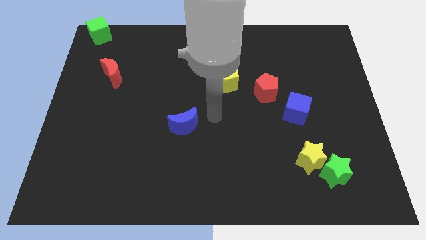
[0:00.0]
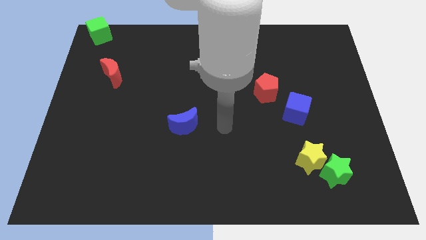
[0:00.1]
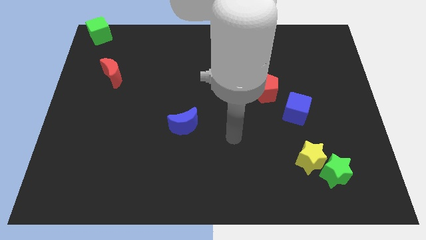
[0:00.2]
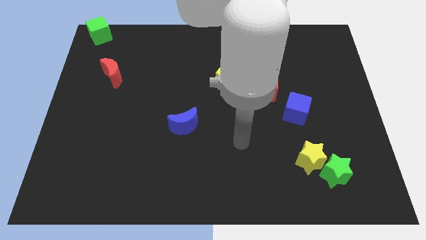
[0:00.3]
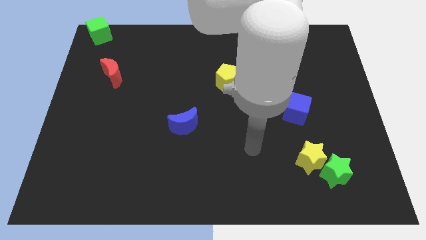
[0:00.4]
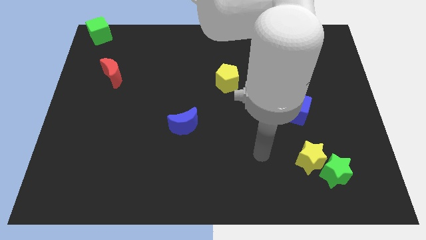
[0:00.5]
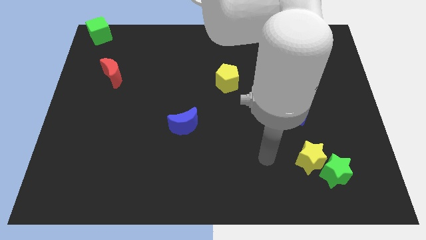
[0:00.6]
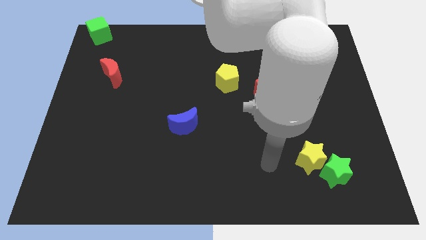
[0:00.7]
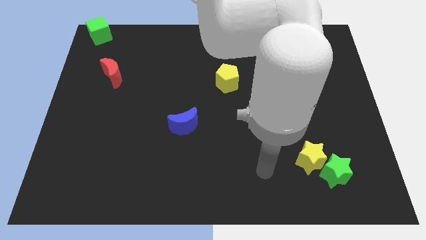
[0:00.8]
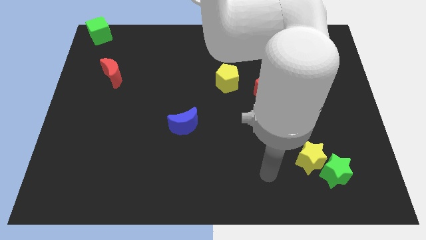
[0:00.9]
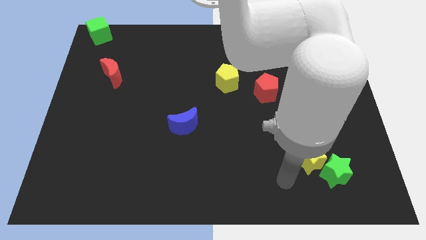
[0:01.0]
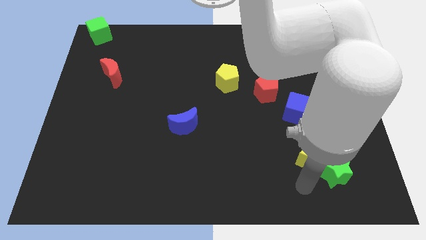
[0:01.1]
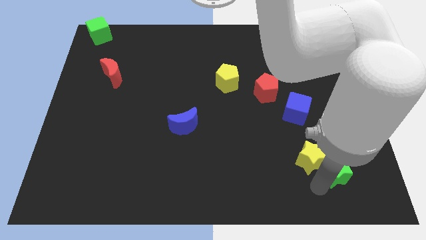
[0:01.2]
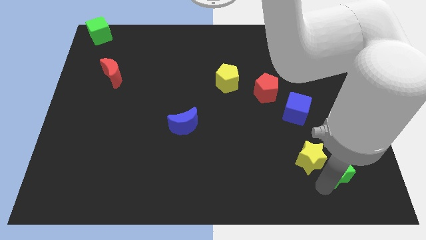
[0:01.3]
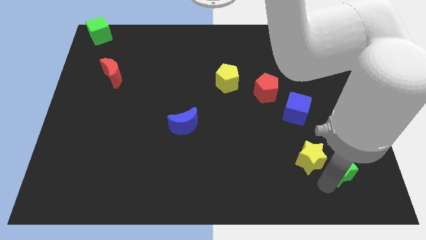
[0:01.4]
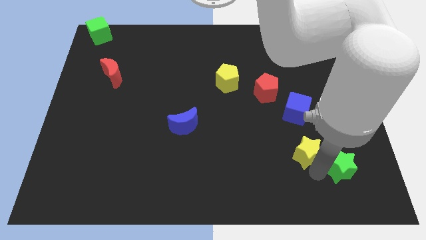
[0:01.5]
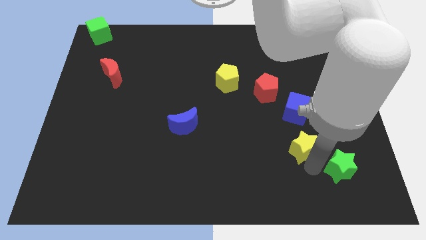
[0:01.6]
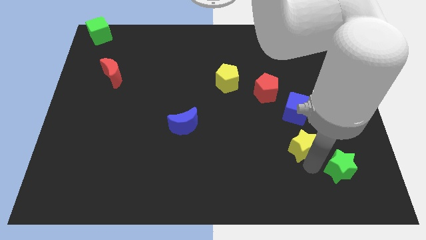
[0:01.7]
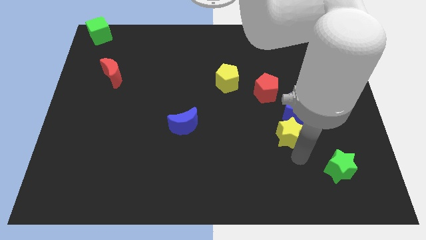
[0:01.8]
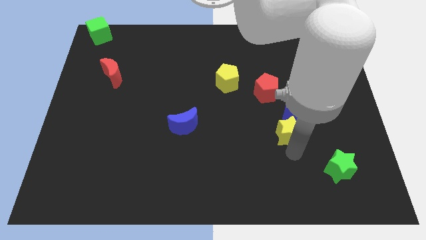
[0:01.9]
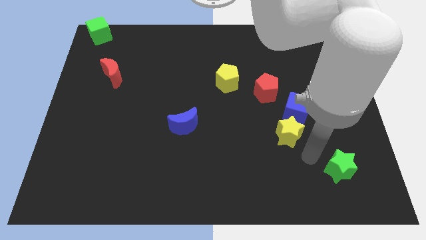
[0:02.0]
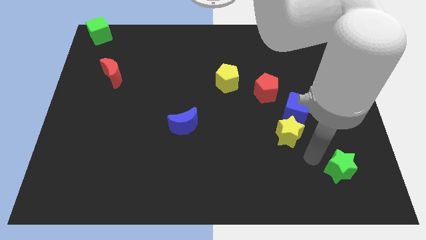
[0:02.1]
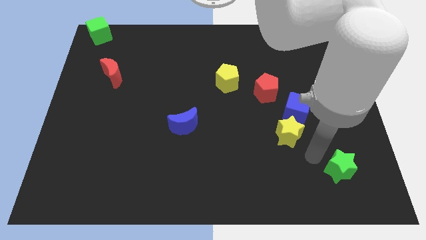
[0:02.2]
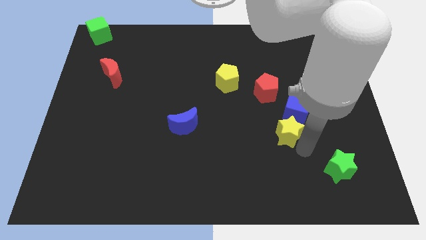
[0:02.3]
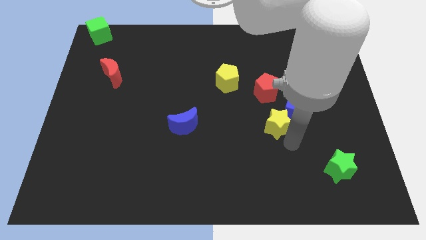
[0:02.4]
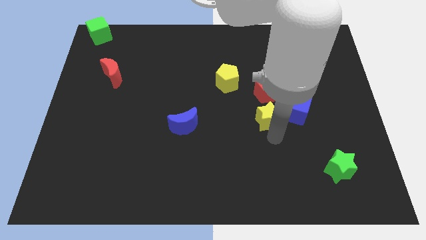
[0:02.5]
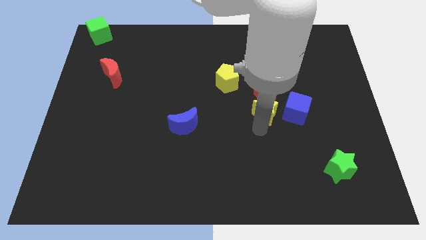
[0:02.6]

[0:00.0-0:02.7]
place yellow star below red pentagon

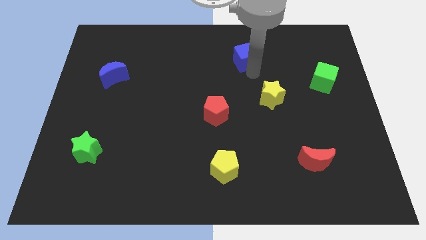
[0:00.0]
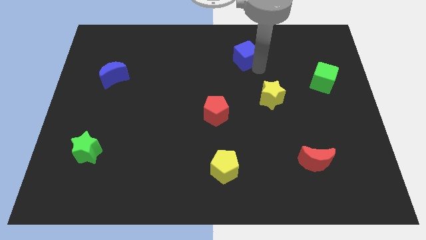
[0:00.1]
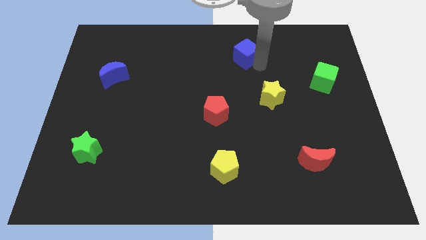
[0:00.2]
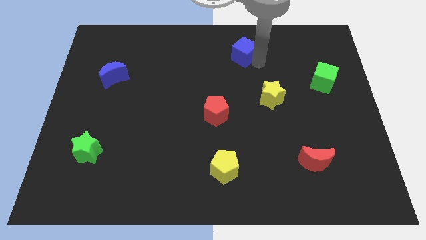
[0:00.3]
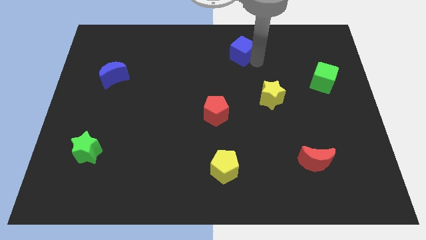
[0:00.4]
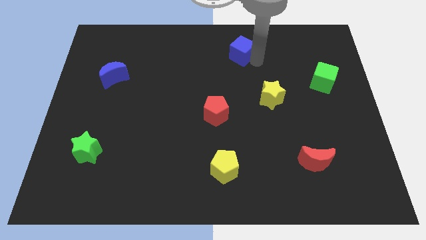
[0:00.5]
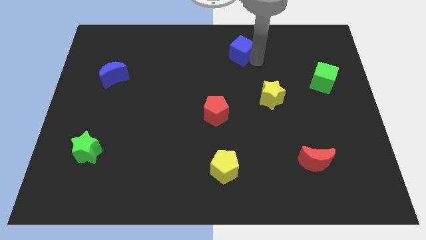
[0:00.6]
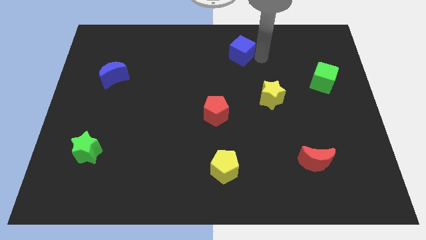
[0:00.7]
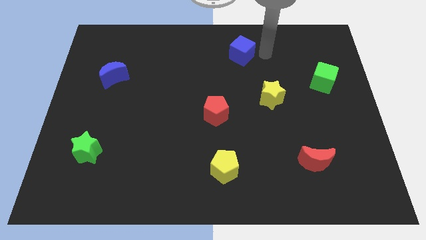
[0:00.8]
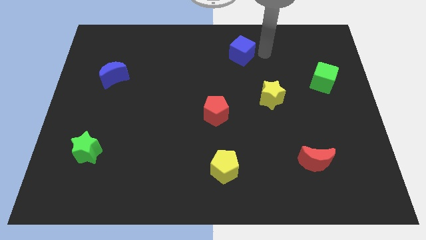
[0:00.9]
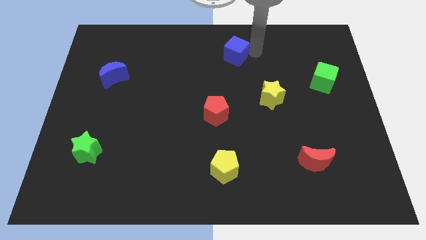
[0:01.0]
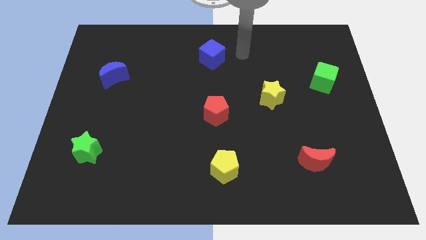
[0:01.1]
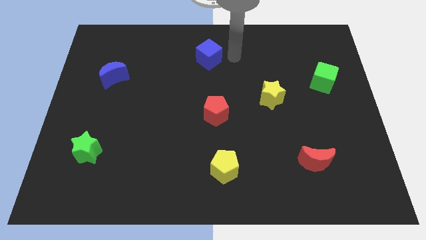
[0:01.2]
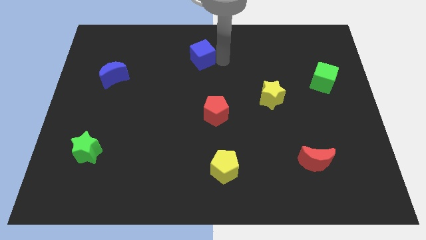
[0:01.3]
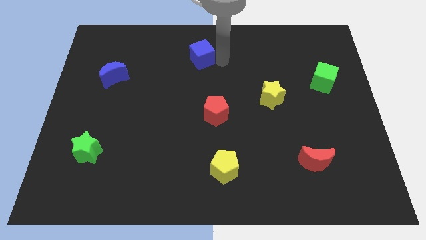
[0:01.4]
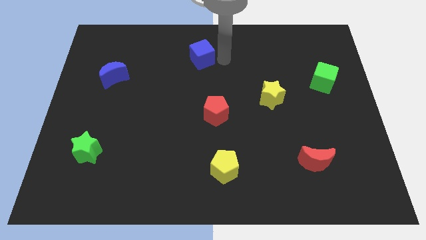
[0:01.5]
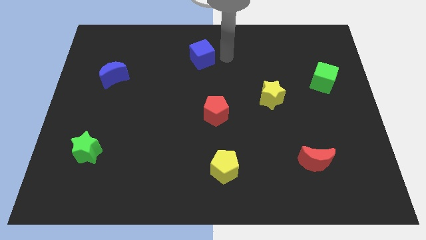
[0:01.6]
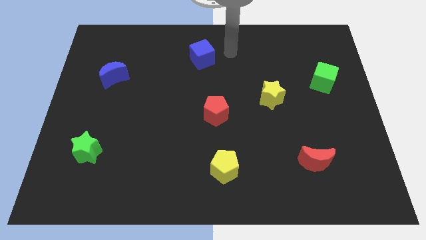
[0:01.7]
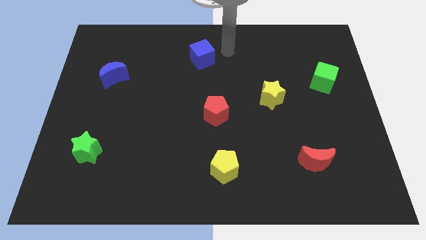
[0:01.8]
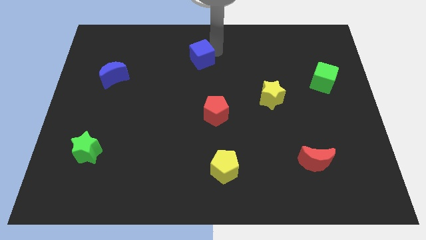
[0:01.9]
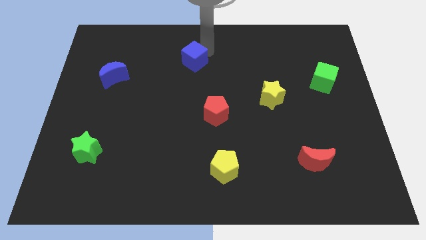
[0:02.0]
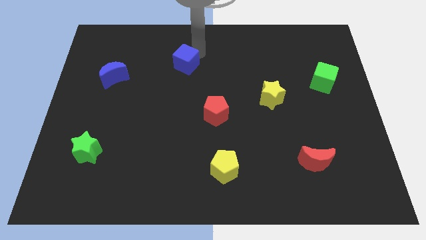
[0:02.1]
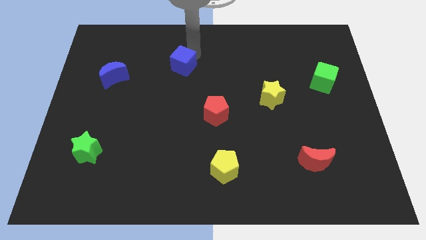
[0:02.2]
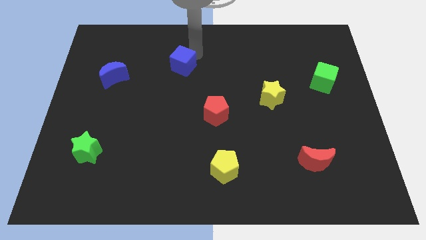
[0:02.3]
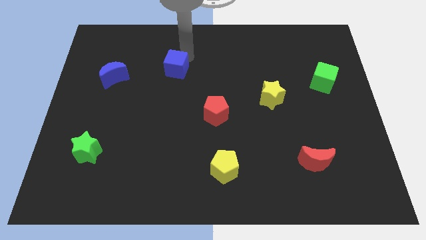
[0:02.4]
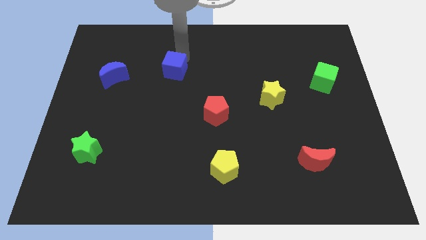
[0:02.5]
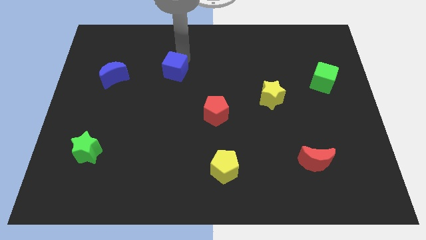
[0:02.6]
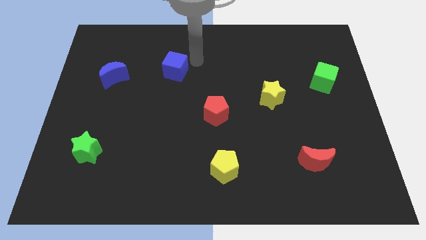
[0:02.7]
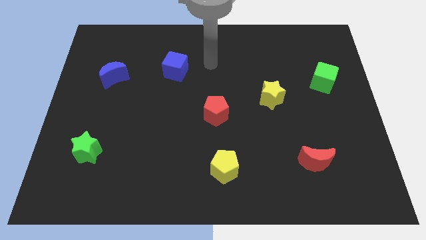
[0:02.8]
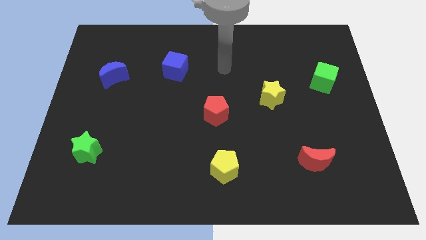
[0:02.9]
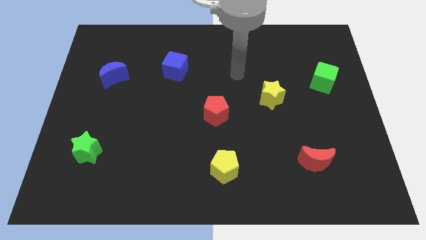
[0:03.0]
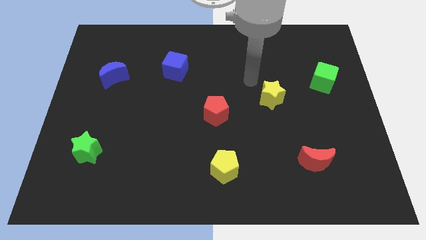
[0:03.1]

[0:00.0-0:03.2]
place the blue cube diagonally top left to the red pentagon

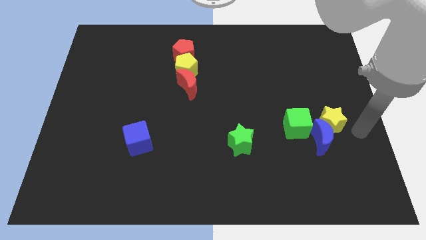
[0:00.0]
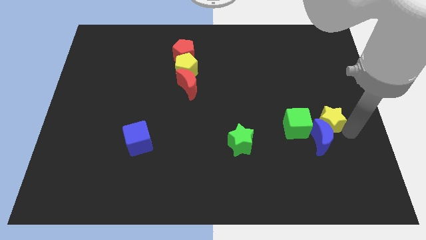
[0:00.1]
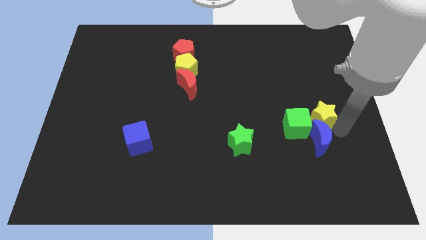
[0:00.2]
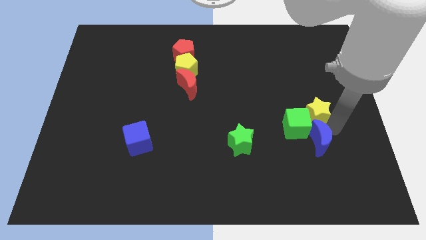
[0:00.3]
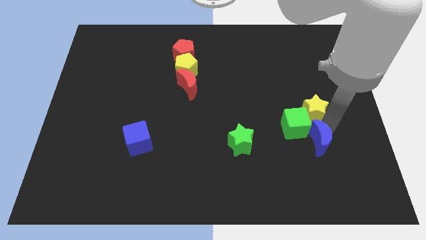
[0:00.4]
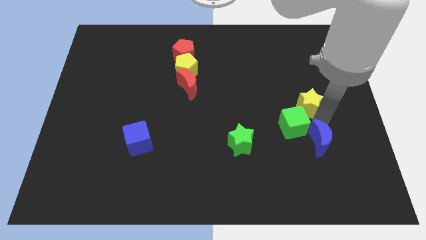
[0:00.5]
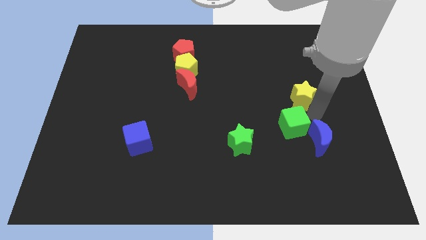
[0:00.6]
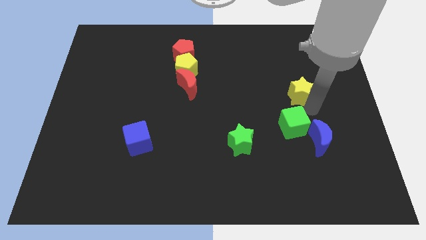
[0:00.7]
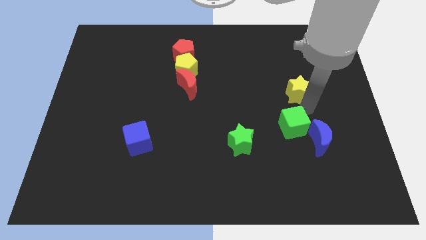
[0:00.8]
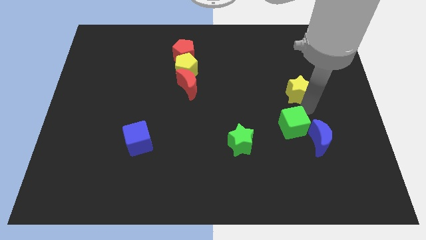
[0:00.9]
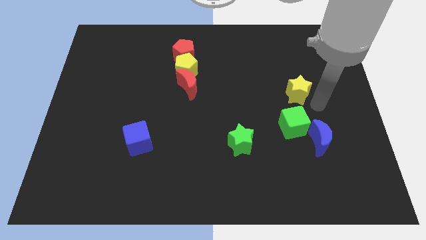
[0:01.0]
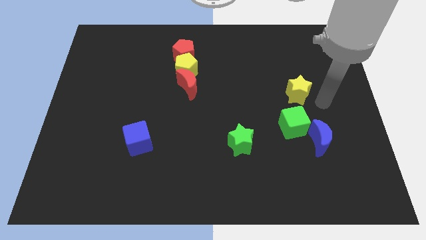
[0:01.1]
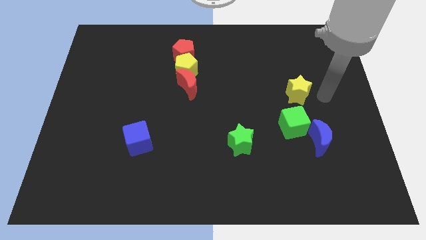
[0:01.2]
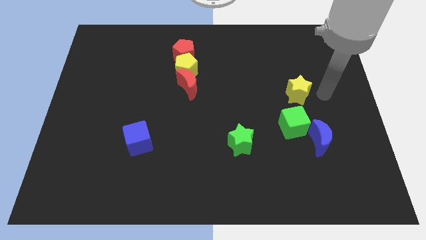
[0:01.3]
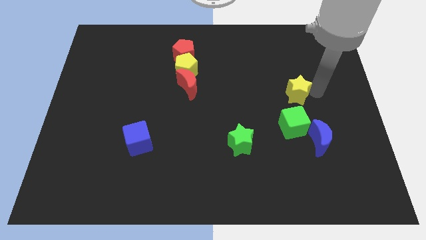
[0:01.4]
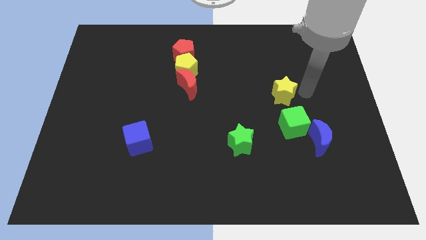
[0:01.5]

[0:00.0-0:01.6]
push yellow star above green cube

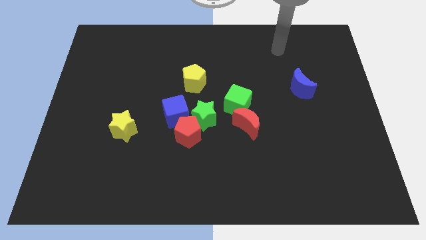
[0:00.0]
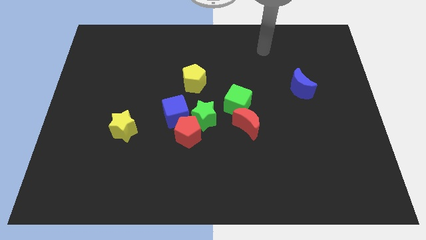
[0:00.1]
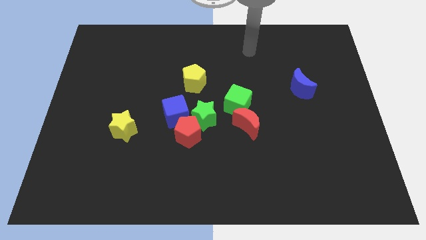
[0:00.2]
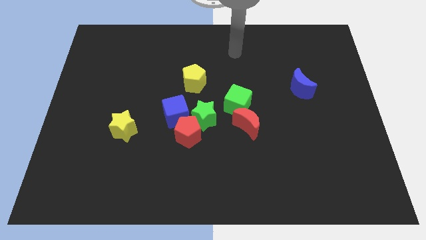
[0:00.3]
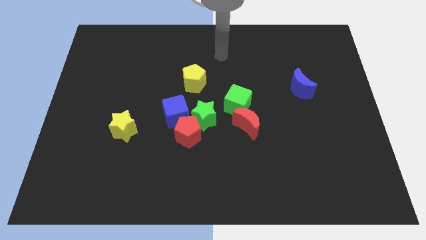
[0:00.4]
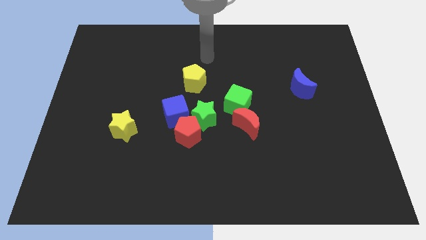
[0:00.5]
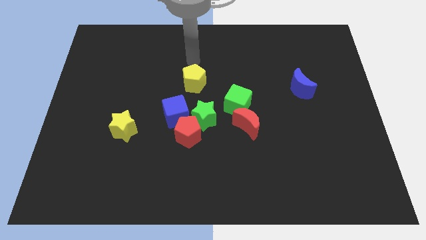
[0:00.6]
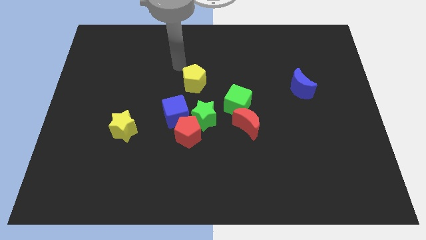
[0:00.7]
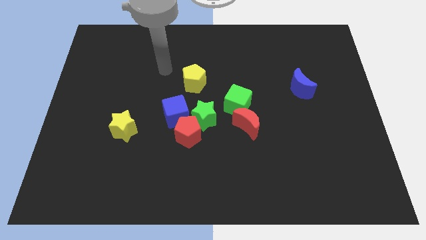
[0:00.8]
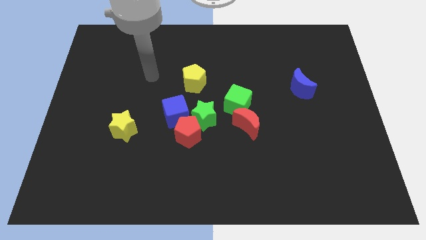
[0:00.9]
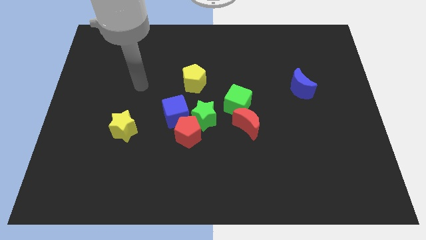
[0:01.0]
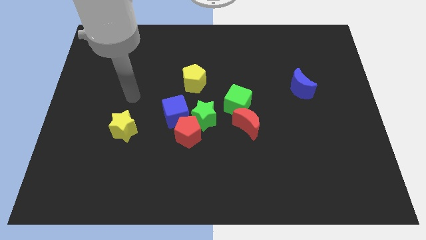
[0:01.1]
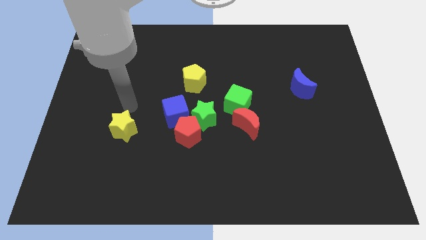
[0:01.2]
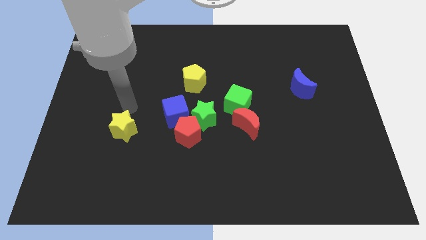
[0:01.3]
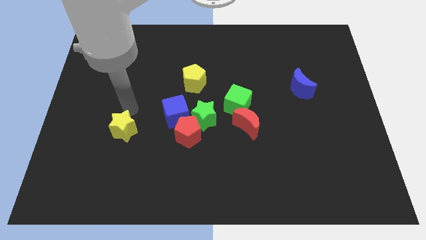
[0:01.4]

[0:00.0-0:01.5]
move the arm above the yellow star
